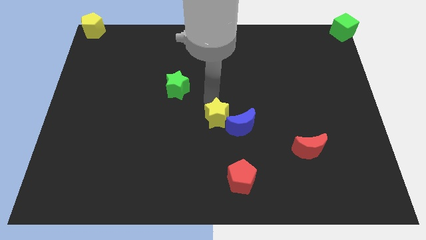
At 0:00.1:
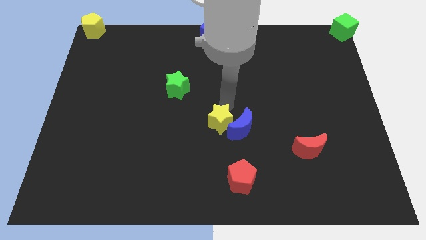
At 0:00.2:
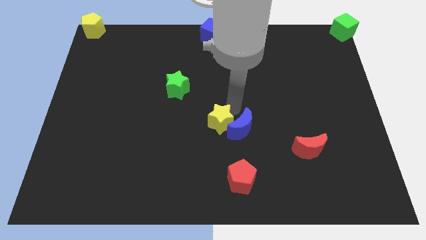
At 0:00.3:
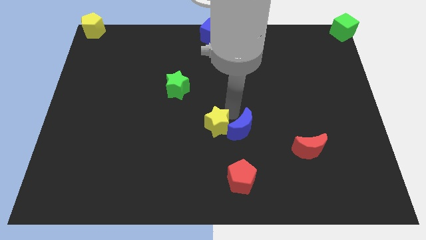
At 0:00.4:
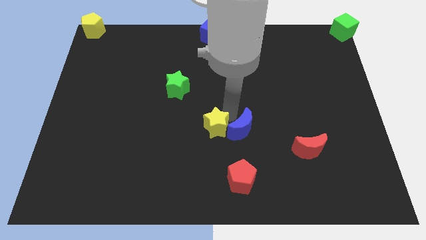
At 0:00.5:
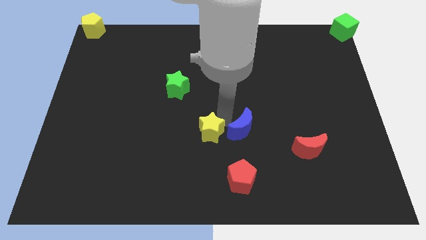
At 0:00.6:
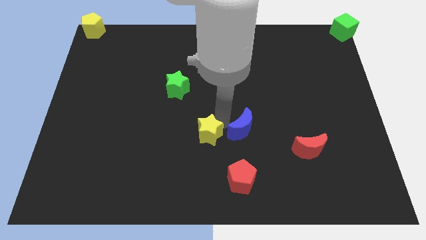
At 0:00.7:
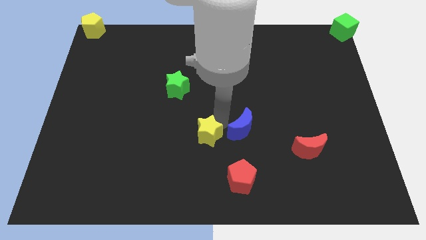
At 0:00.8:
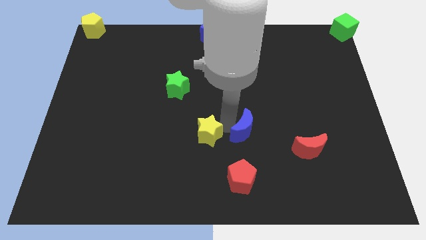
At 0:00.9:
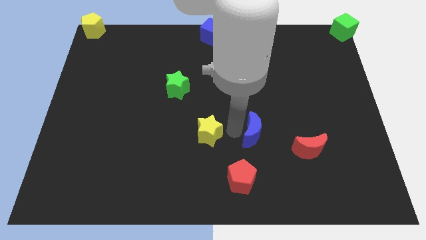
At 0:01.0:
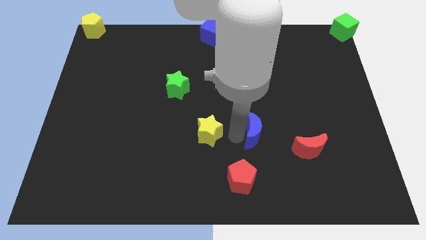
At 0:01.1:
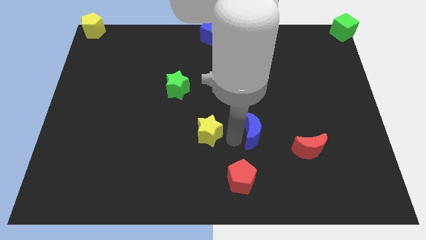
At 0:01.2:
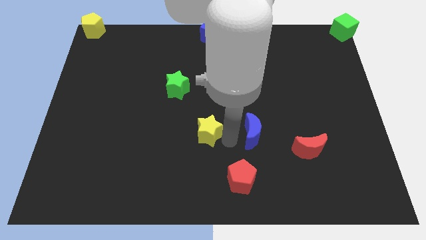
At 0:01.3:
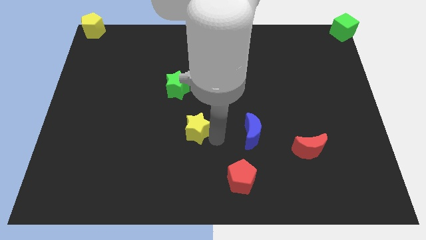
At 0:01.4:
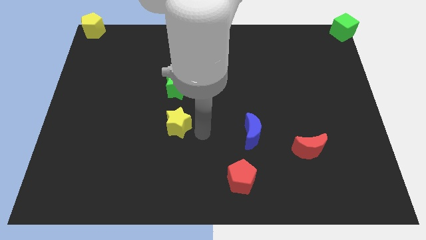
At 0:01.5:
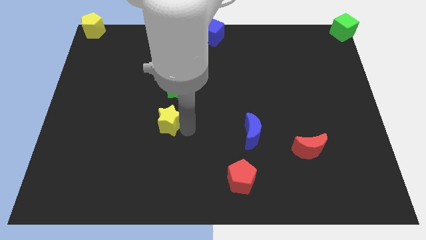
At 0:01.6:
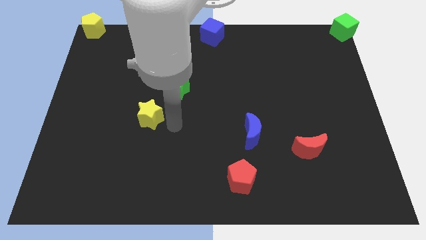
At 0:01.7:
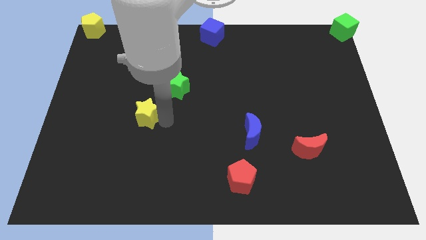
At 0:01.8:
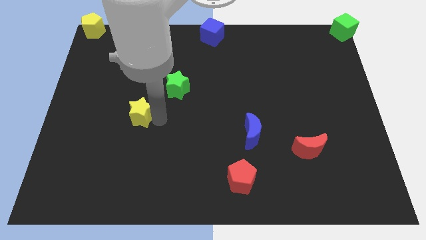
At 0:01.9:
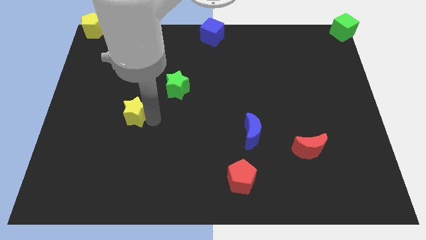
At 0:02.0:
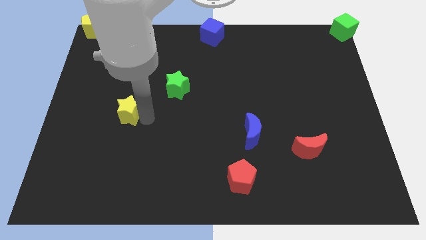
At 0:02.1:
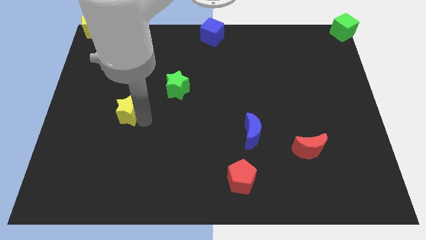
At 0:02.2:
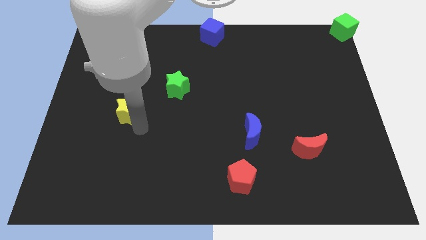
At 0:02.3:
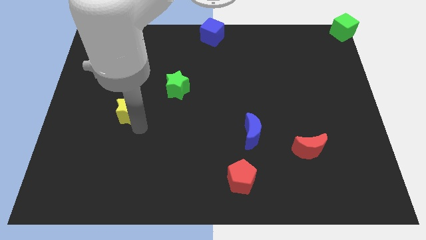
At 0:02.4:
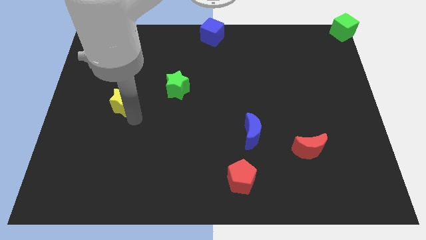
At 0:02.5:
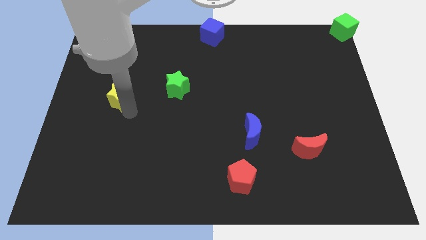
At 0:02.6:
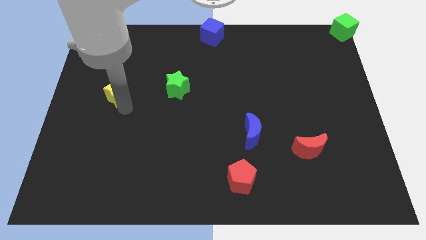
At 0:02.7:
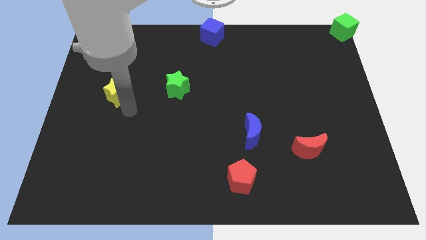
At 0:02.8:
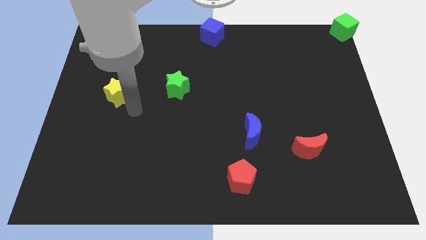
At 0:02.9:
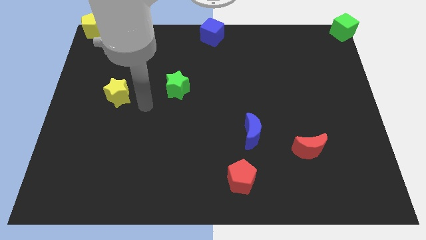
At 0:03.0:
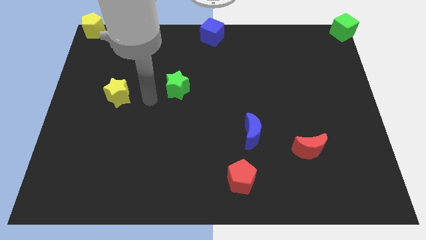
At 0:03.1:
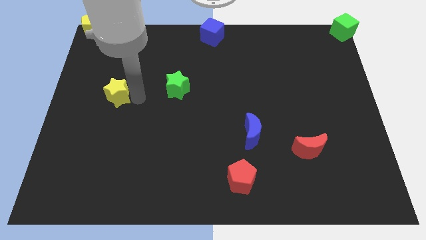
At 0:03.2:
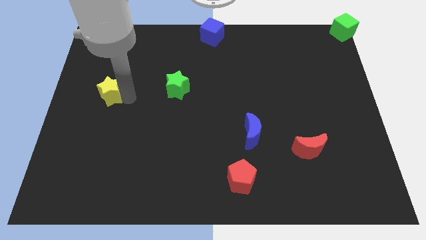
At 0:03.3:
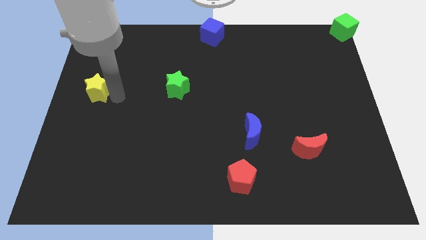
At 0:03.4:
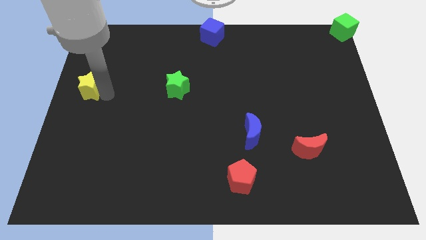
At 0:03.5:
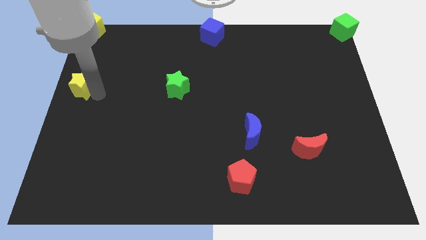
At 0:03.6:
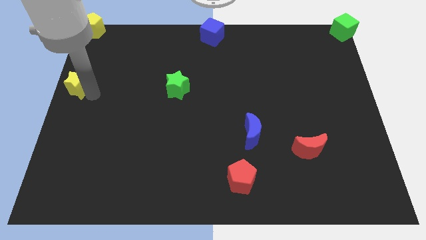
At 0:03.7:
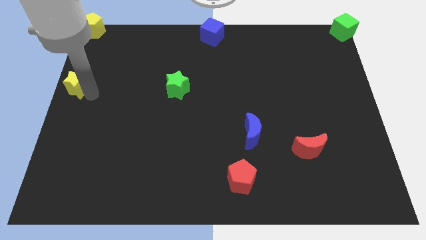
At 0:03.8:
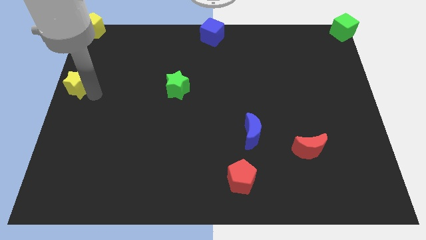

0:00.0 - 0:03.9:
slide the yellow star to the left side of the board

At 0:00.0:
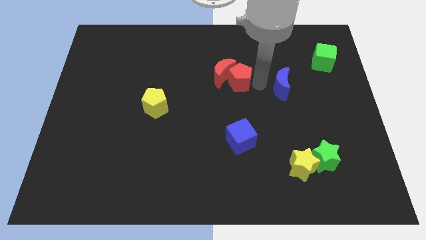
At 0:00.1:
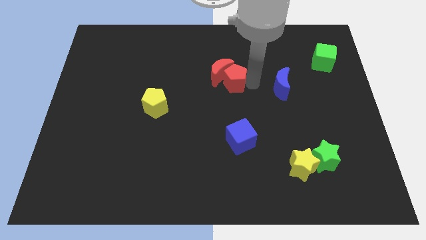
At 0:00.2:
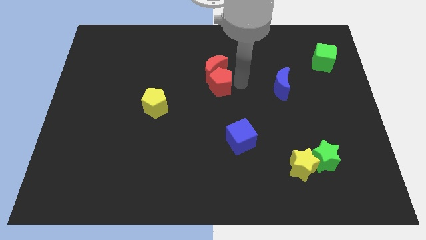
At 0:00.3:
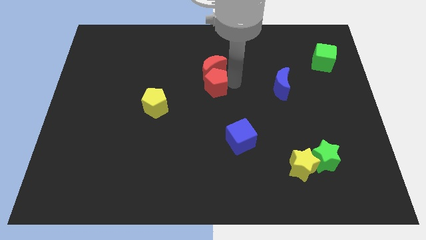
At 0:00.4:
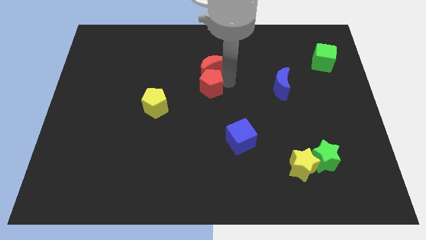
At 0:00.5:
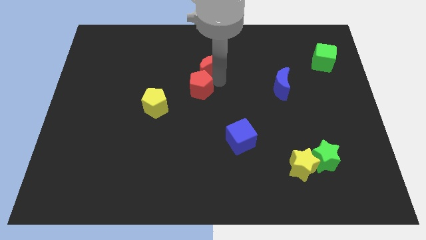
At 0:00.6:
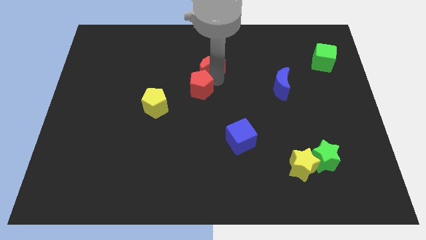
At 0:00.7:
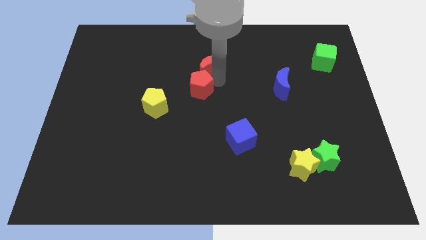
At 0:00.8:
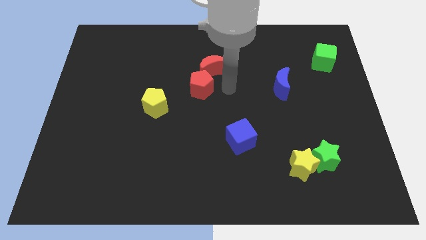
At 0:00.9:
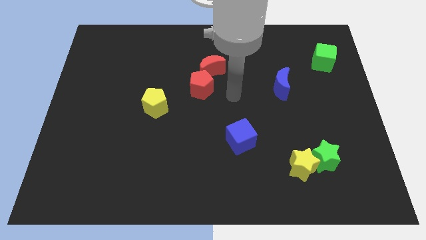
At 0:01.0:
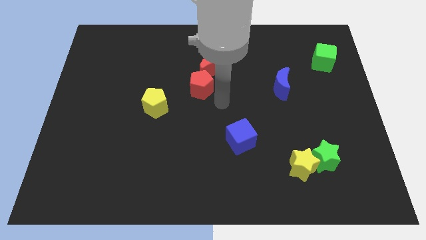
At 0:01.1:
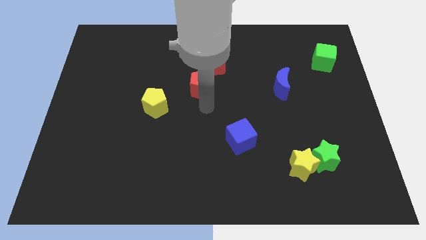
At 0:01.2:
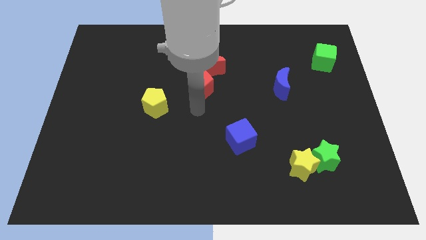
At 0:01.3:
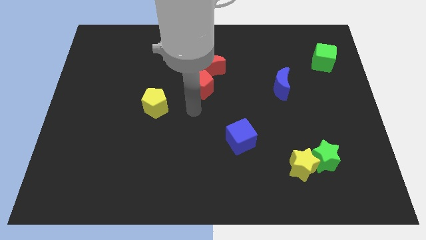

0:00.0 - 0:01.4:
drag both the red blocks slightly to the left side of the board

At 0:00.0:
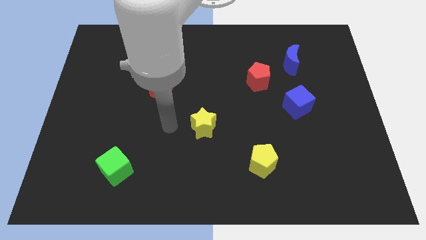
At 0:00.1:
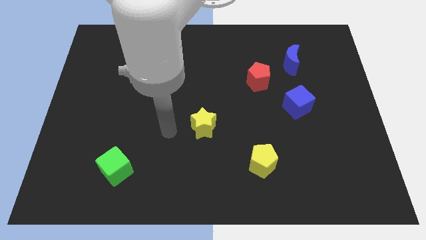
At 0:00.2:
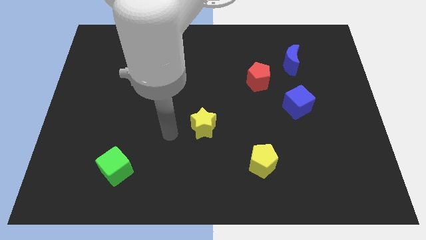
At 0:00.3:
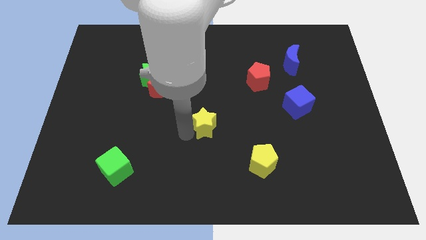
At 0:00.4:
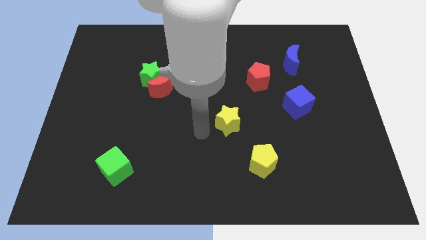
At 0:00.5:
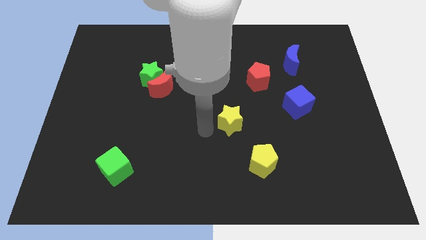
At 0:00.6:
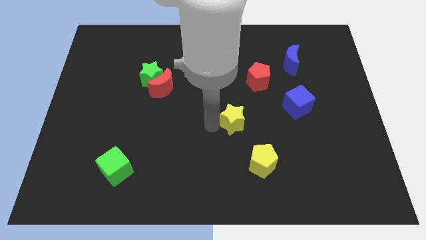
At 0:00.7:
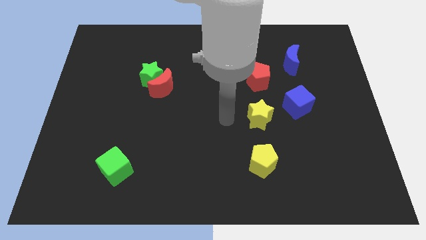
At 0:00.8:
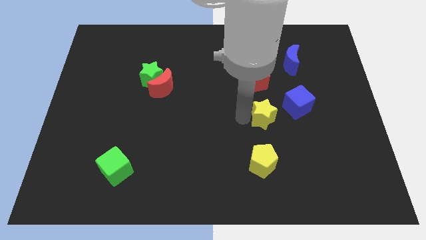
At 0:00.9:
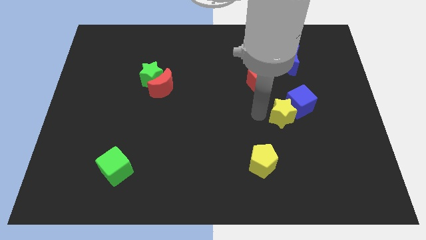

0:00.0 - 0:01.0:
move the yellow star towards the blue cube

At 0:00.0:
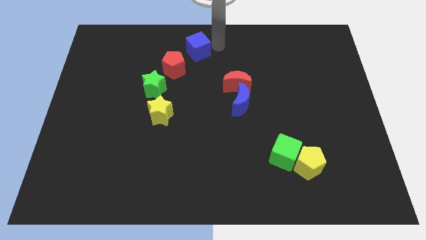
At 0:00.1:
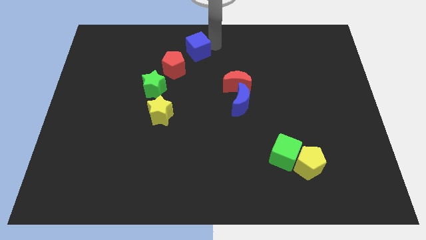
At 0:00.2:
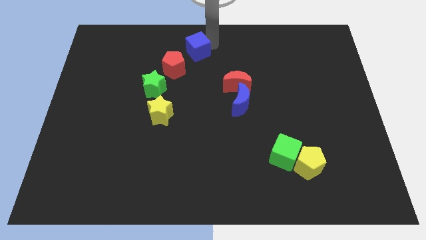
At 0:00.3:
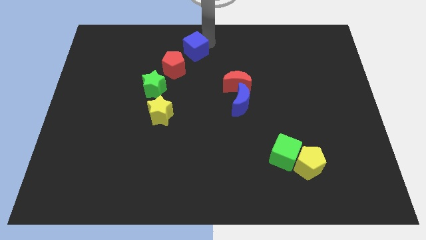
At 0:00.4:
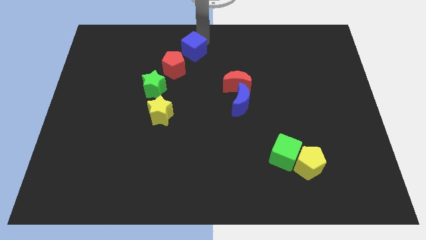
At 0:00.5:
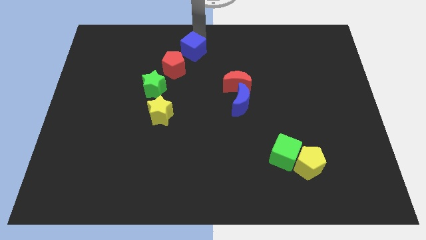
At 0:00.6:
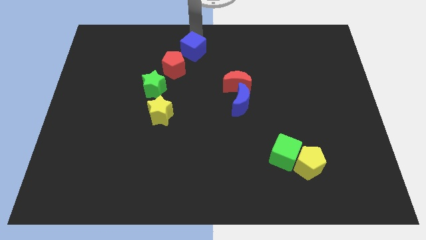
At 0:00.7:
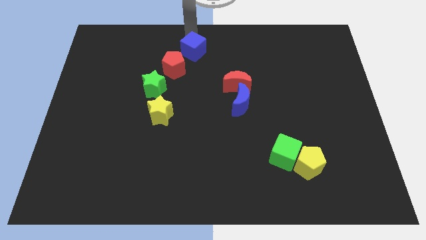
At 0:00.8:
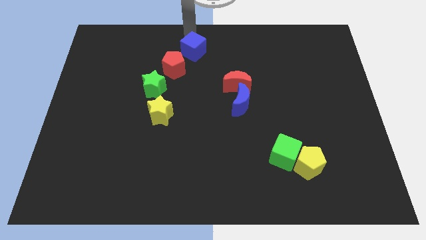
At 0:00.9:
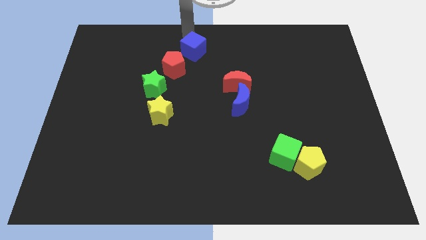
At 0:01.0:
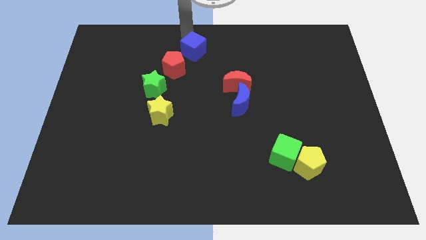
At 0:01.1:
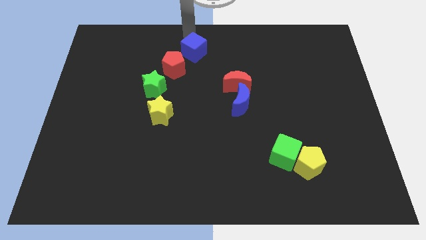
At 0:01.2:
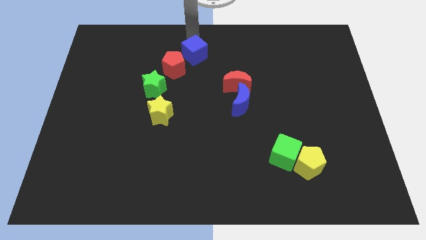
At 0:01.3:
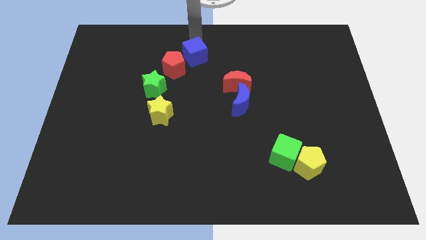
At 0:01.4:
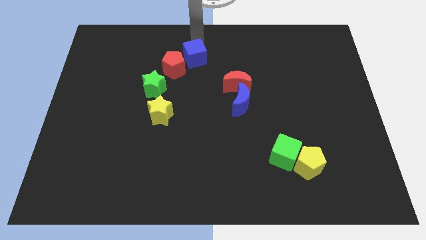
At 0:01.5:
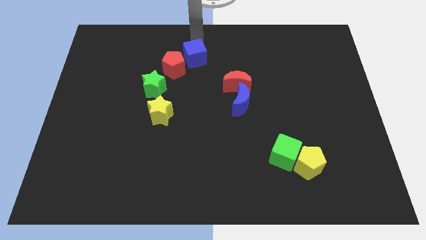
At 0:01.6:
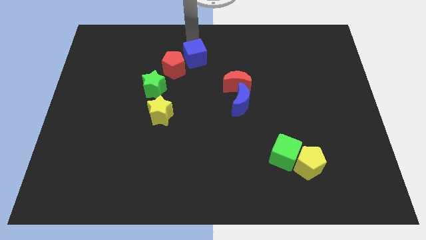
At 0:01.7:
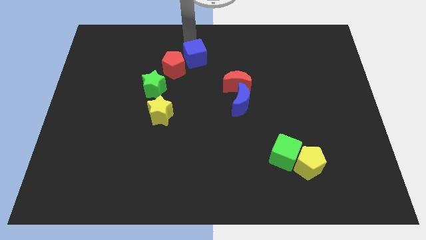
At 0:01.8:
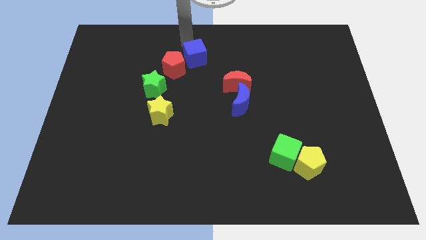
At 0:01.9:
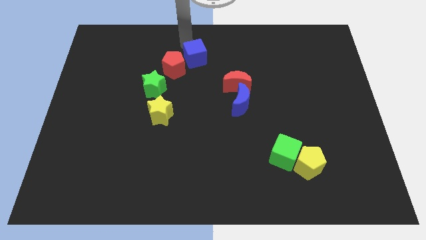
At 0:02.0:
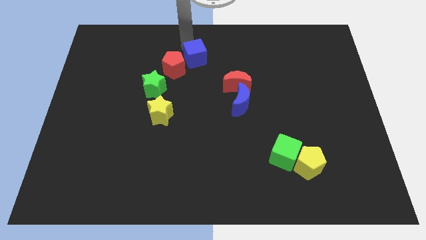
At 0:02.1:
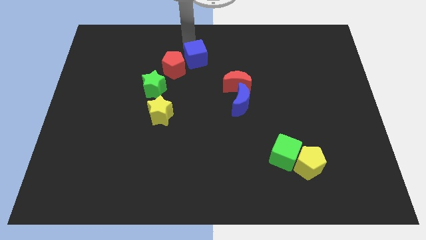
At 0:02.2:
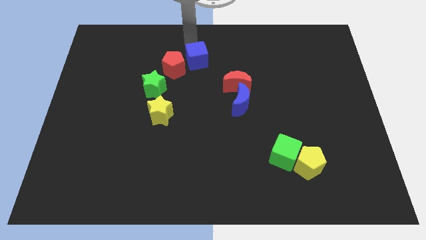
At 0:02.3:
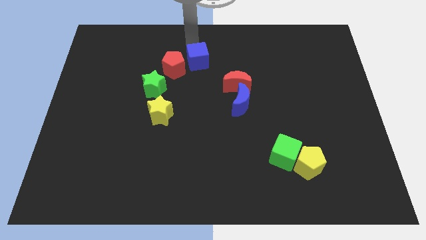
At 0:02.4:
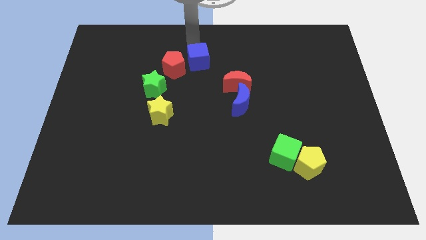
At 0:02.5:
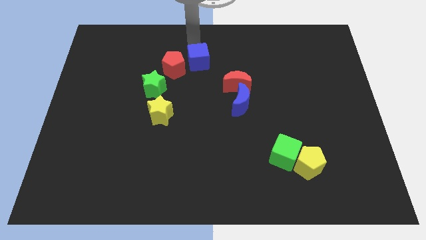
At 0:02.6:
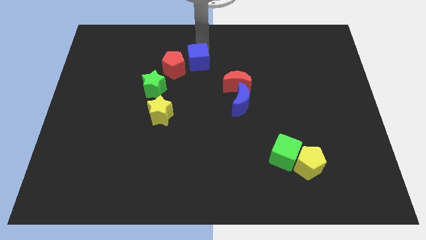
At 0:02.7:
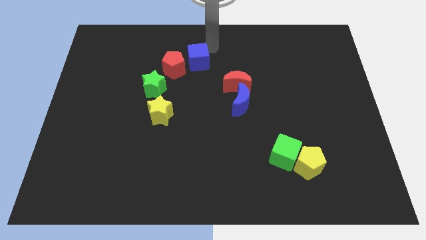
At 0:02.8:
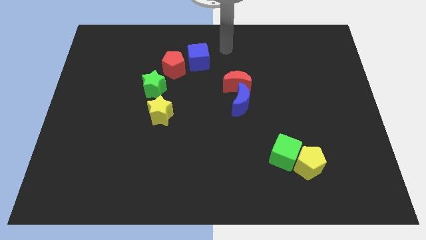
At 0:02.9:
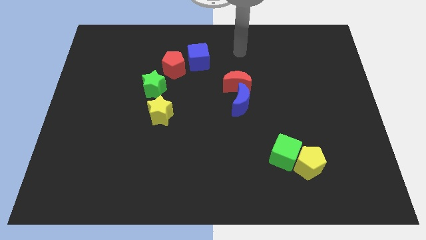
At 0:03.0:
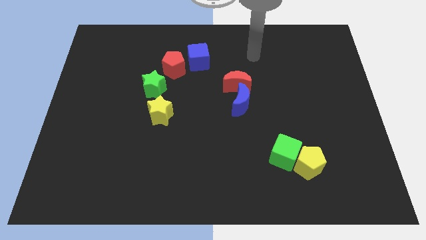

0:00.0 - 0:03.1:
slide the blue cube at the top right side of the red pentagon
